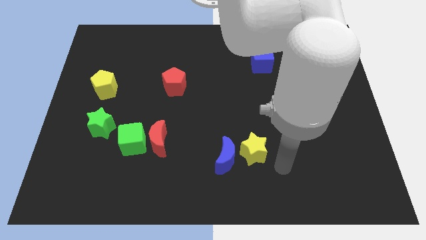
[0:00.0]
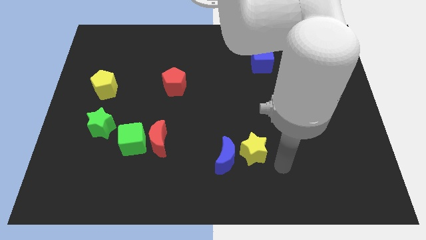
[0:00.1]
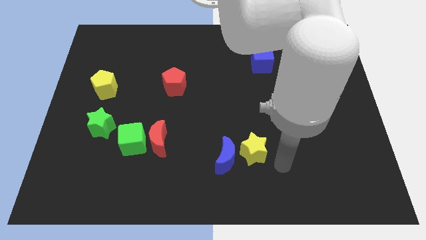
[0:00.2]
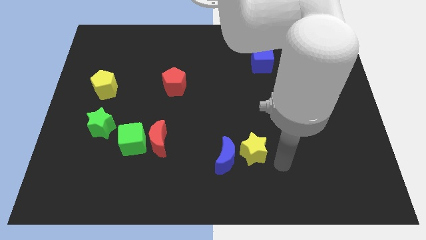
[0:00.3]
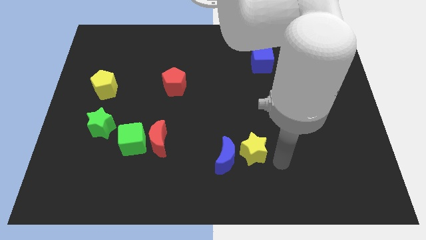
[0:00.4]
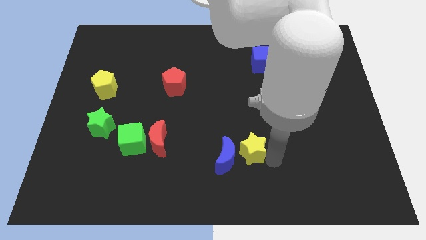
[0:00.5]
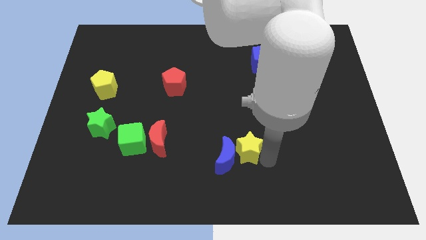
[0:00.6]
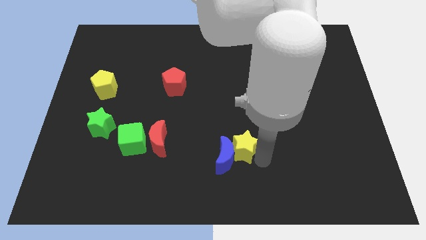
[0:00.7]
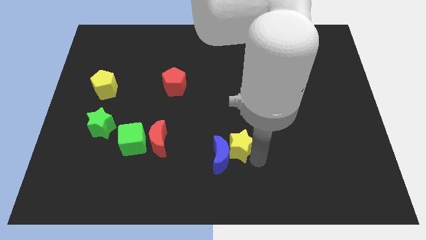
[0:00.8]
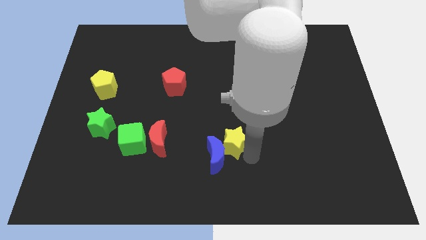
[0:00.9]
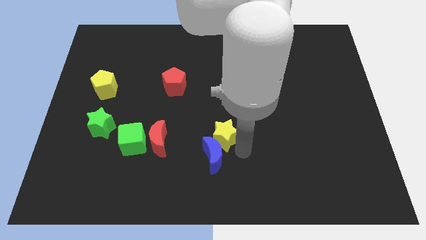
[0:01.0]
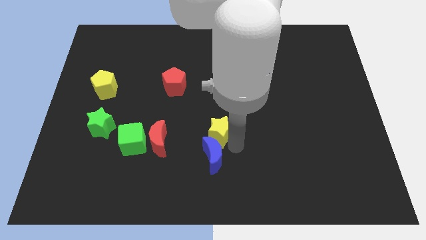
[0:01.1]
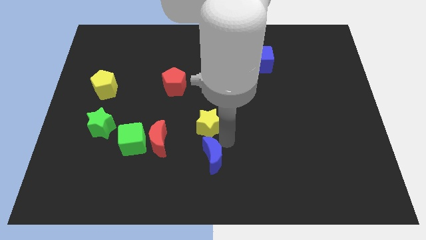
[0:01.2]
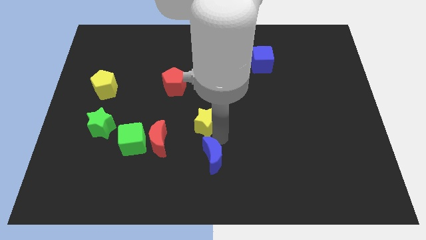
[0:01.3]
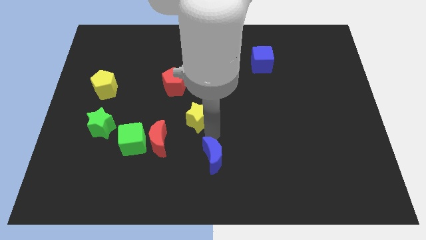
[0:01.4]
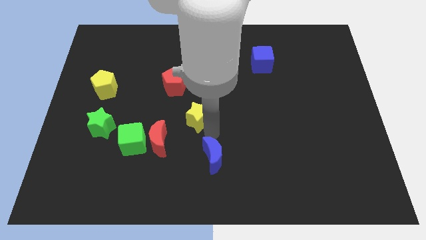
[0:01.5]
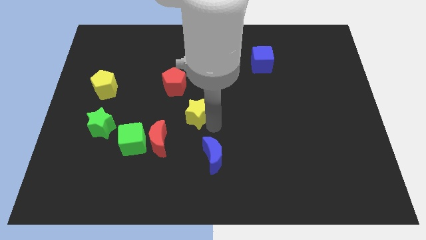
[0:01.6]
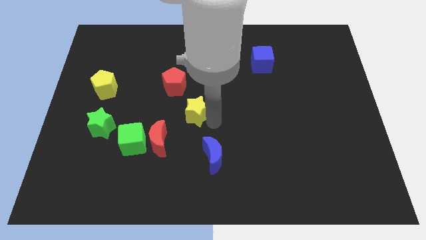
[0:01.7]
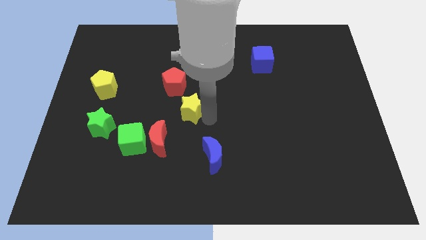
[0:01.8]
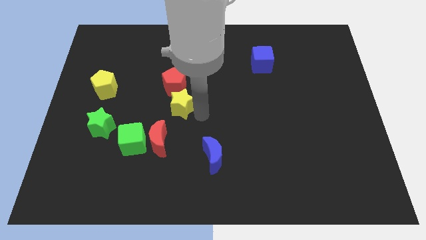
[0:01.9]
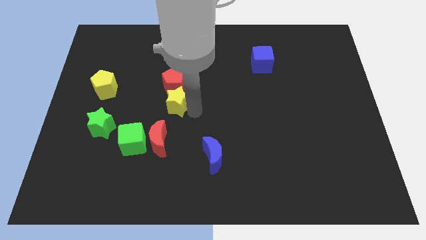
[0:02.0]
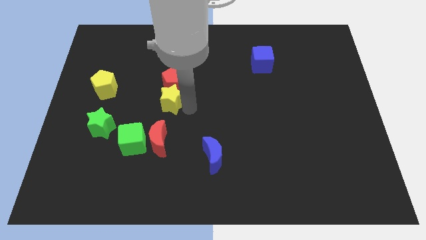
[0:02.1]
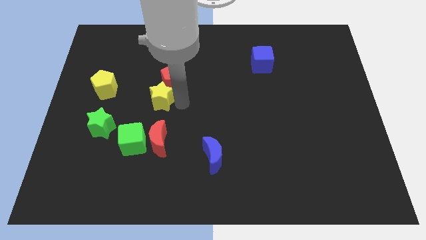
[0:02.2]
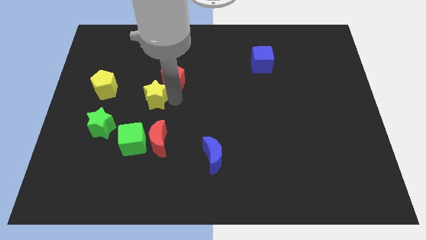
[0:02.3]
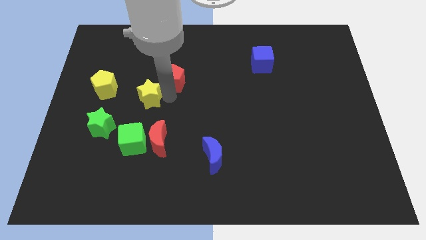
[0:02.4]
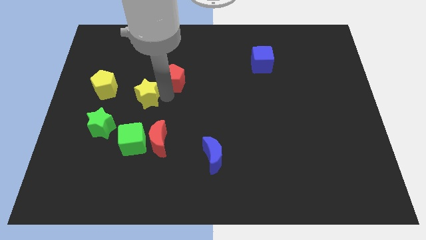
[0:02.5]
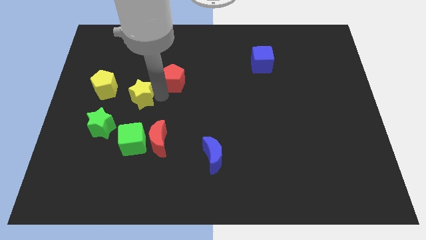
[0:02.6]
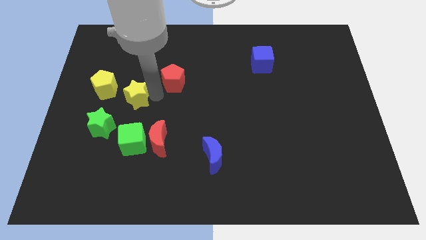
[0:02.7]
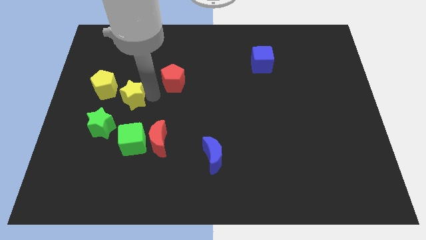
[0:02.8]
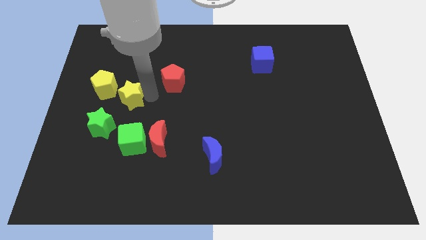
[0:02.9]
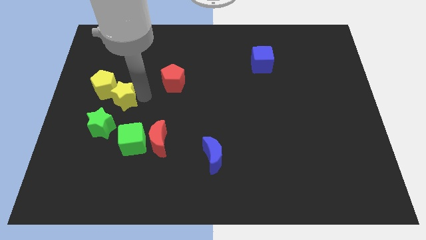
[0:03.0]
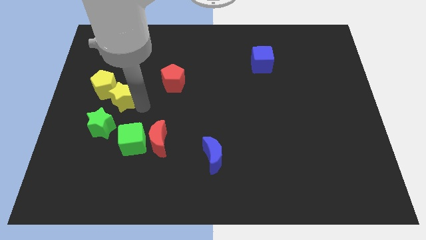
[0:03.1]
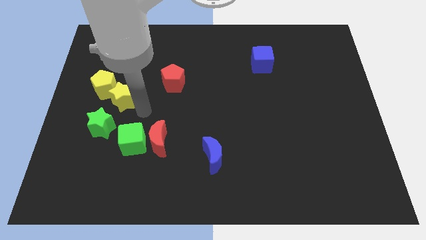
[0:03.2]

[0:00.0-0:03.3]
push the yellow star into the yellow pentagon

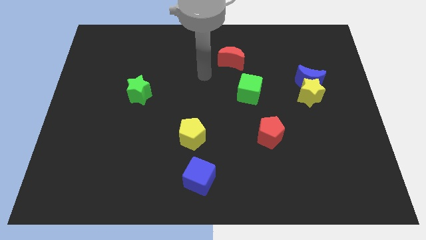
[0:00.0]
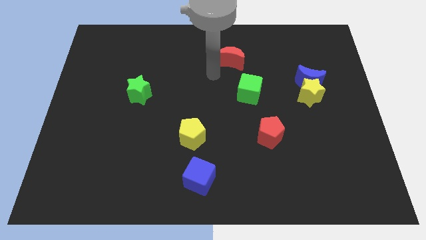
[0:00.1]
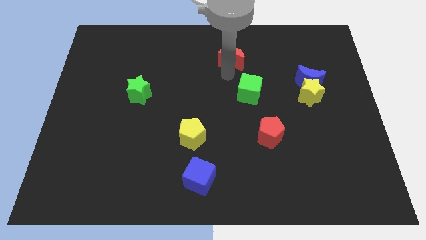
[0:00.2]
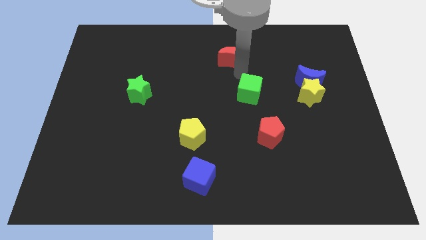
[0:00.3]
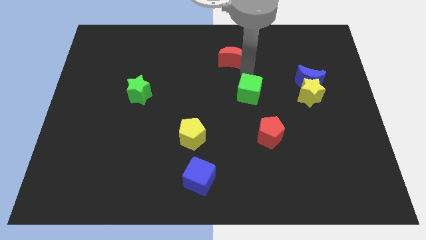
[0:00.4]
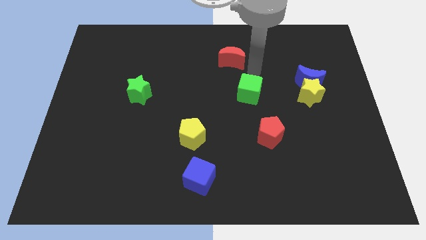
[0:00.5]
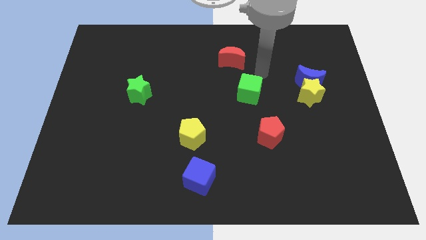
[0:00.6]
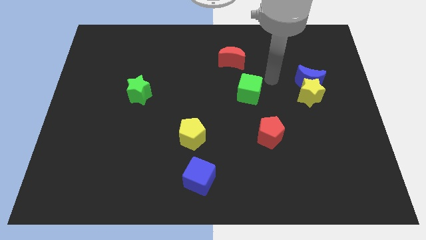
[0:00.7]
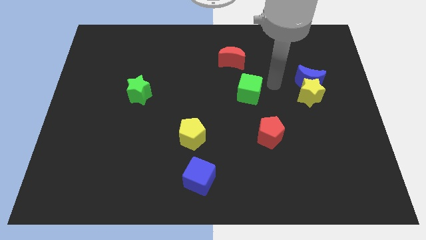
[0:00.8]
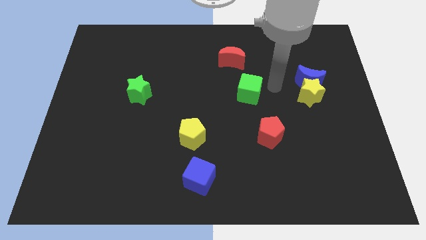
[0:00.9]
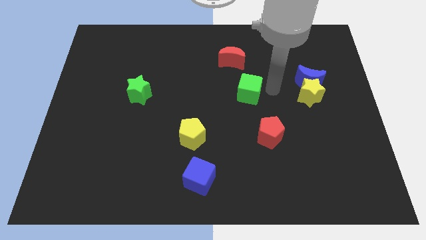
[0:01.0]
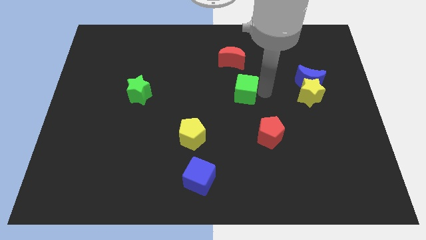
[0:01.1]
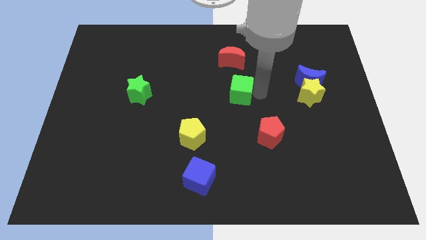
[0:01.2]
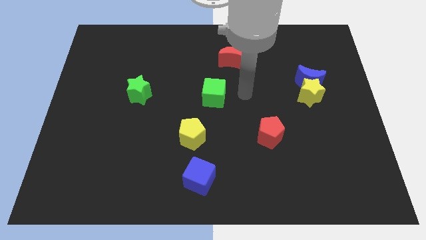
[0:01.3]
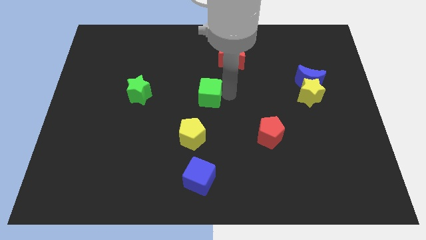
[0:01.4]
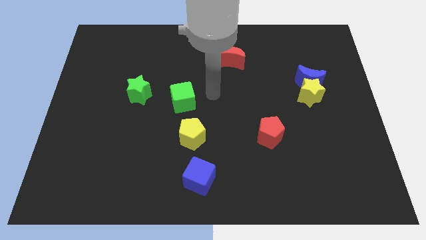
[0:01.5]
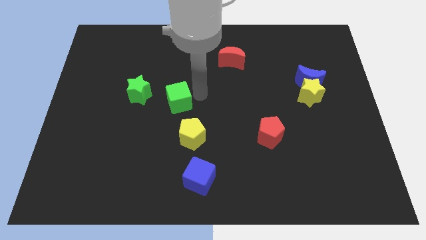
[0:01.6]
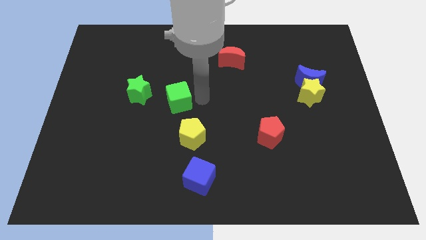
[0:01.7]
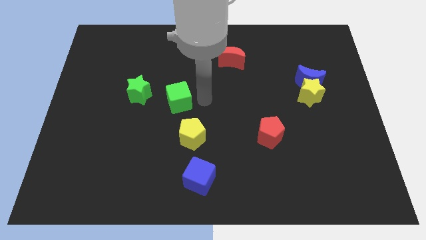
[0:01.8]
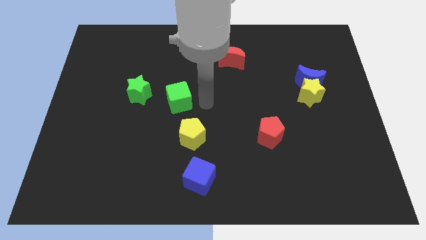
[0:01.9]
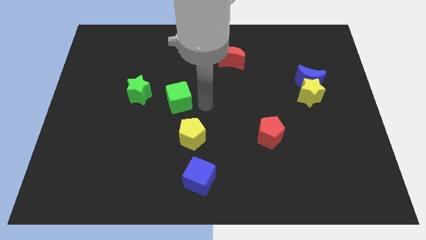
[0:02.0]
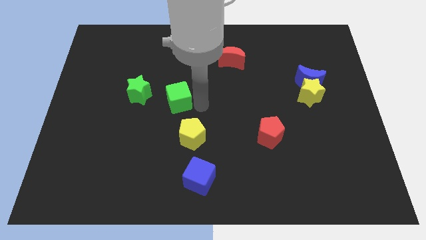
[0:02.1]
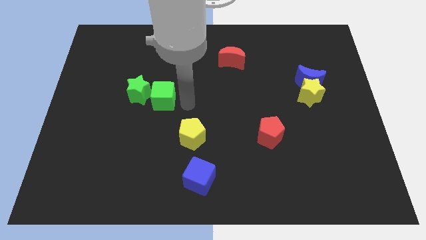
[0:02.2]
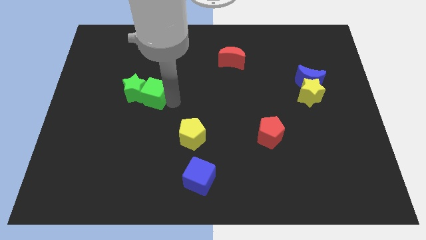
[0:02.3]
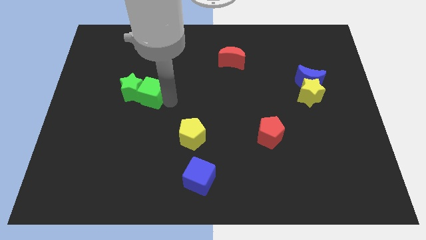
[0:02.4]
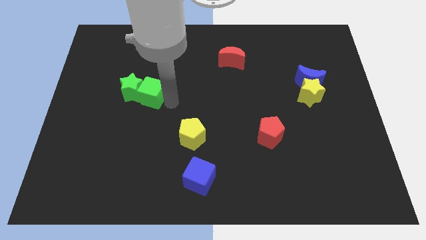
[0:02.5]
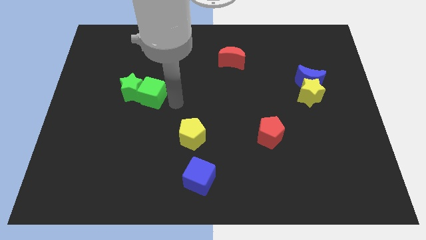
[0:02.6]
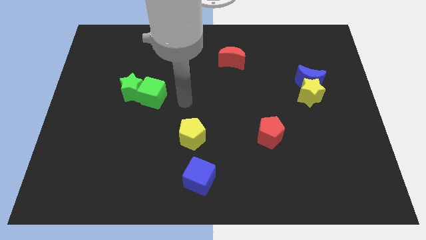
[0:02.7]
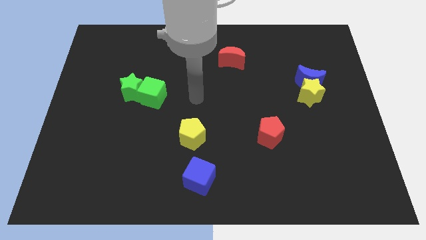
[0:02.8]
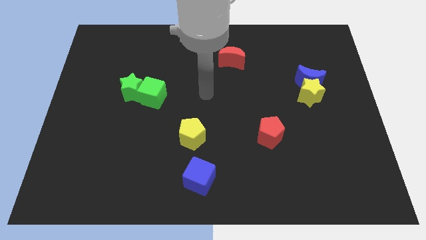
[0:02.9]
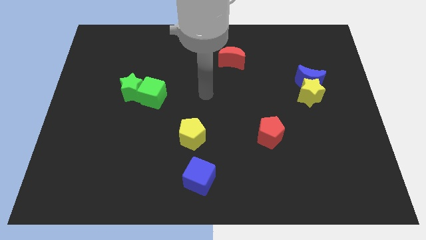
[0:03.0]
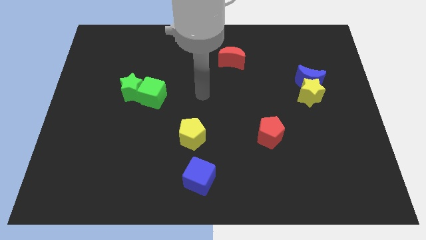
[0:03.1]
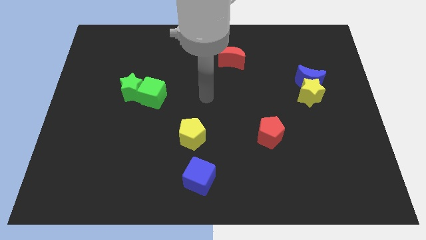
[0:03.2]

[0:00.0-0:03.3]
push the green cube into the green star

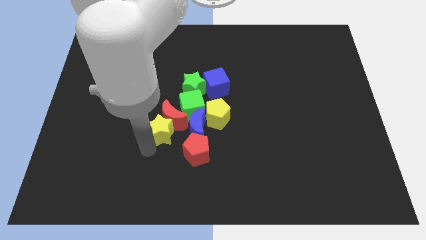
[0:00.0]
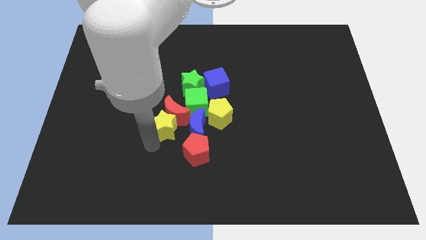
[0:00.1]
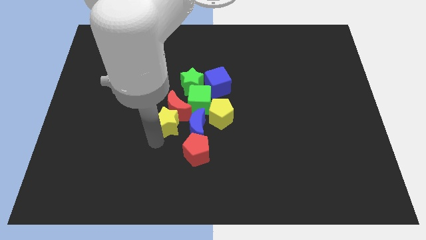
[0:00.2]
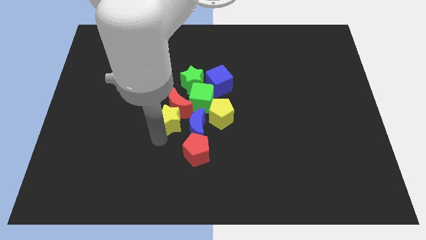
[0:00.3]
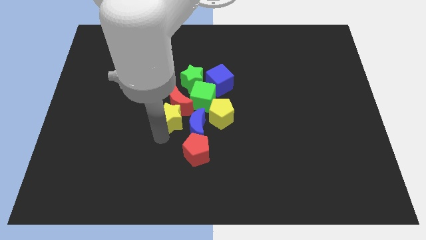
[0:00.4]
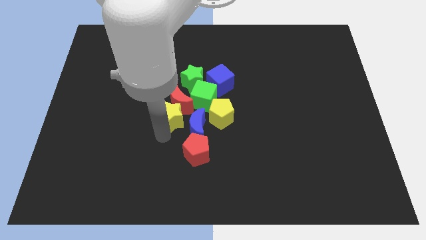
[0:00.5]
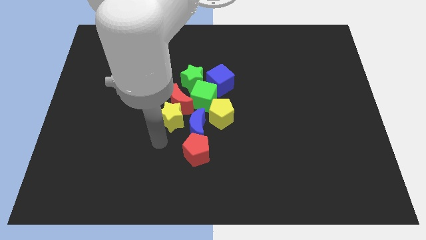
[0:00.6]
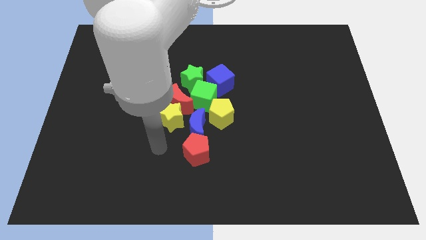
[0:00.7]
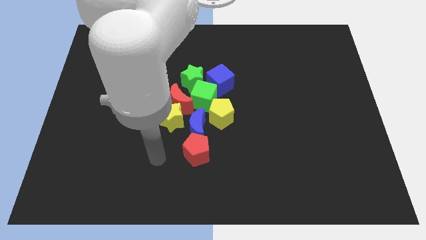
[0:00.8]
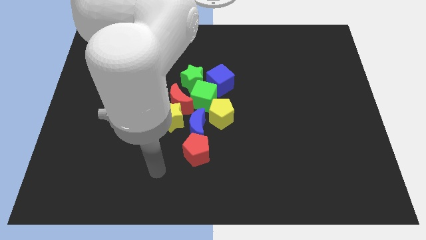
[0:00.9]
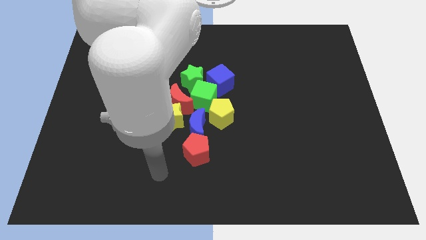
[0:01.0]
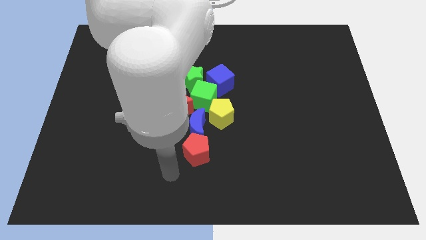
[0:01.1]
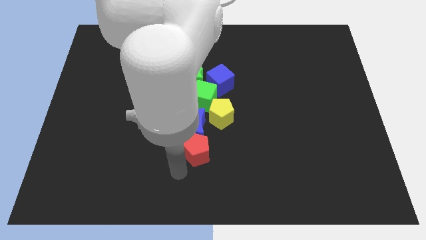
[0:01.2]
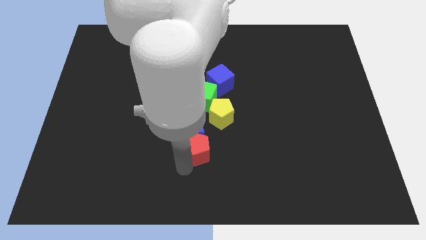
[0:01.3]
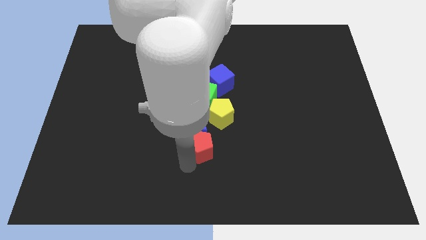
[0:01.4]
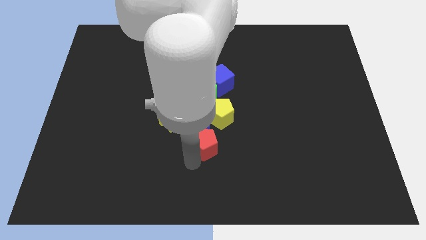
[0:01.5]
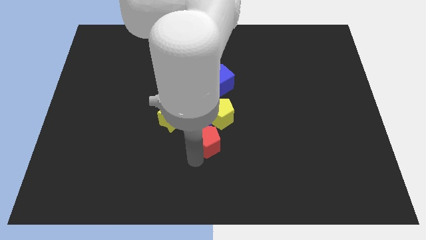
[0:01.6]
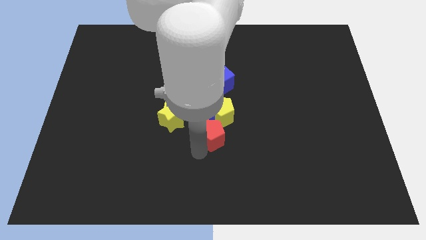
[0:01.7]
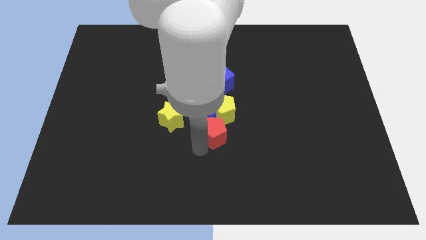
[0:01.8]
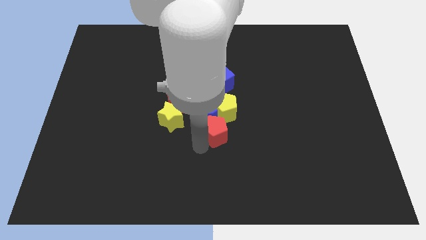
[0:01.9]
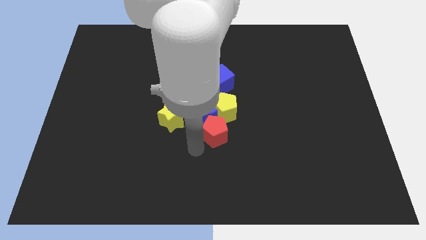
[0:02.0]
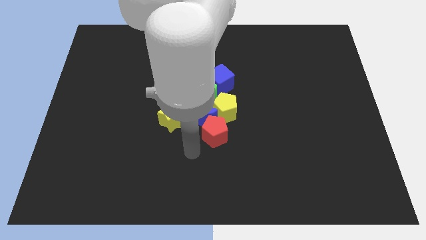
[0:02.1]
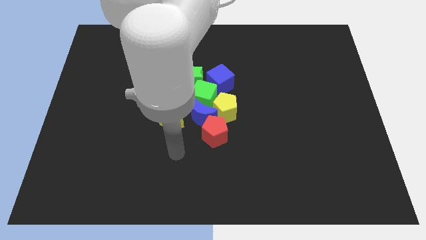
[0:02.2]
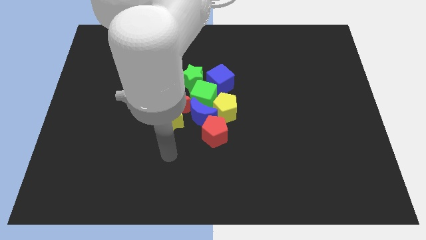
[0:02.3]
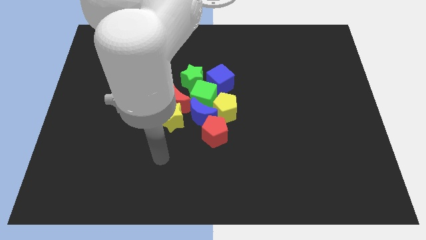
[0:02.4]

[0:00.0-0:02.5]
slightly push the red pentagon into a group of blocks
